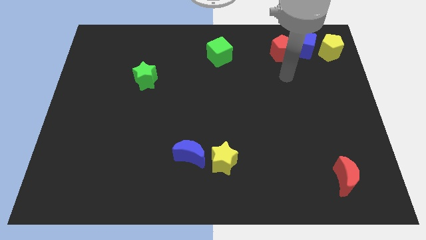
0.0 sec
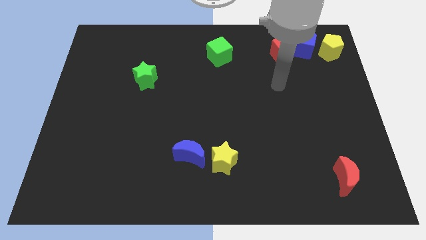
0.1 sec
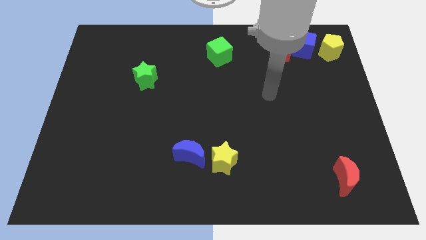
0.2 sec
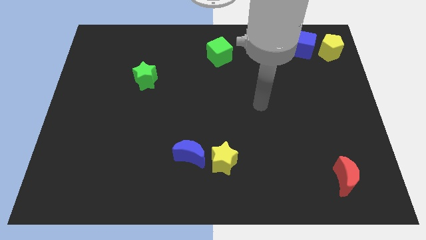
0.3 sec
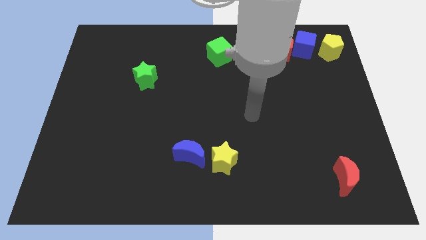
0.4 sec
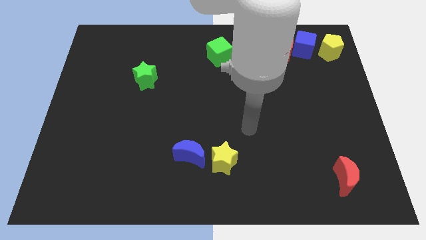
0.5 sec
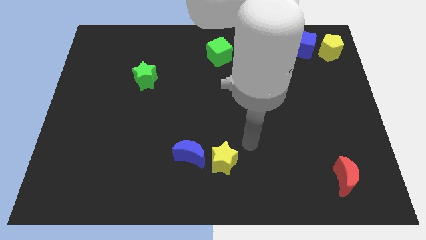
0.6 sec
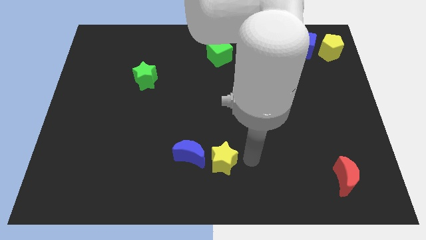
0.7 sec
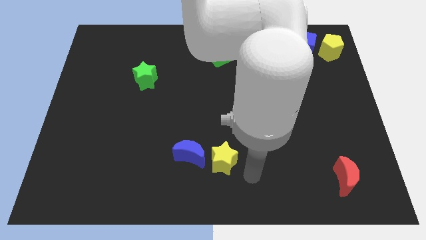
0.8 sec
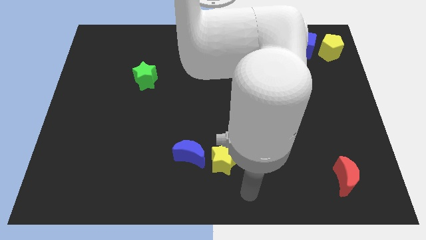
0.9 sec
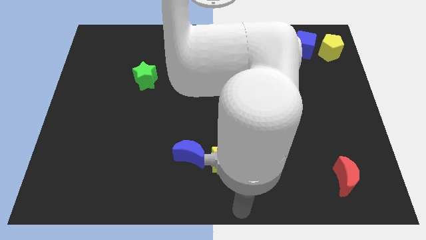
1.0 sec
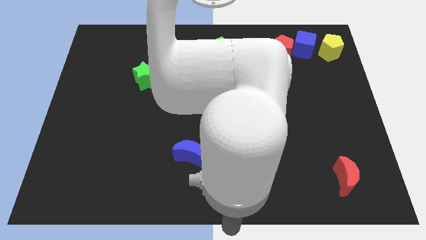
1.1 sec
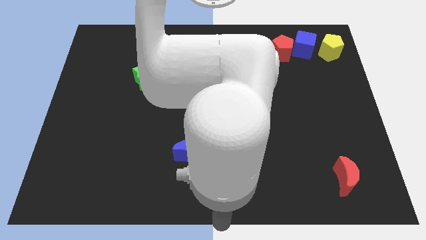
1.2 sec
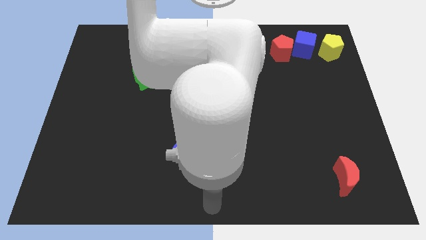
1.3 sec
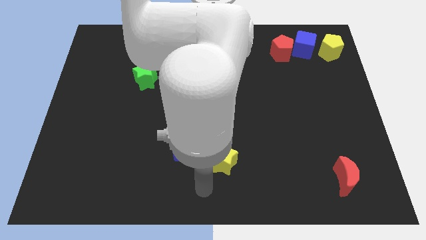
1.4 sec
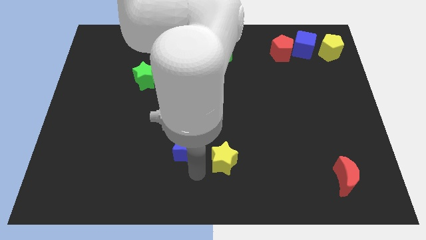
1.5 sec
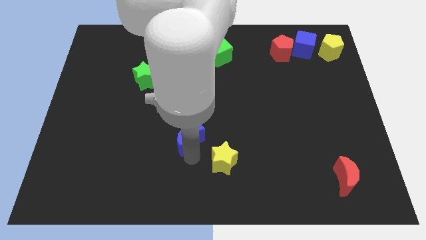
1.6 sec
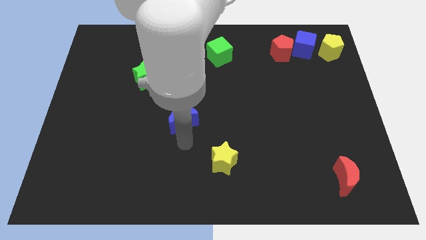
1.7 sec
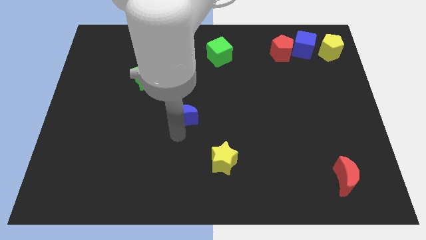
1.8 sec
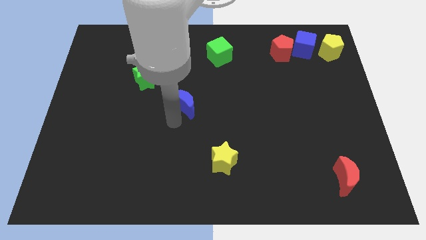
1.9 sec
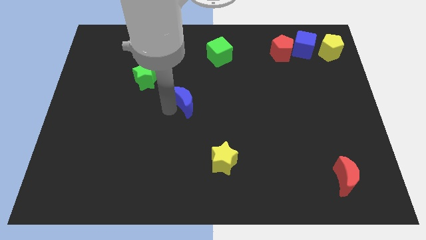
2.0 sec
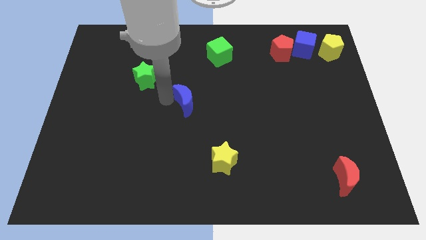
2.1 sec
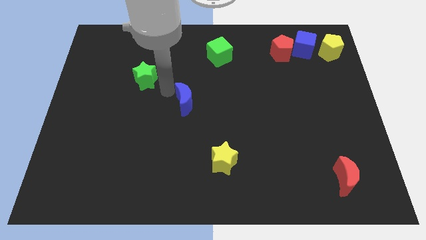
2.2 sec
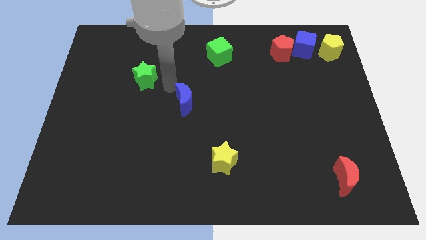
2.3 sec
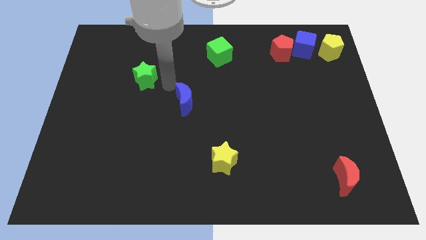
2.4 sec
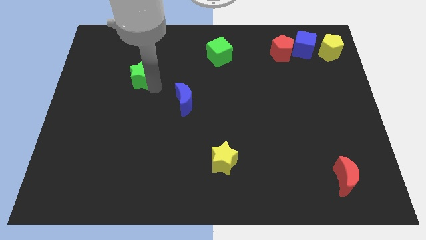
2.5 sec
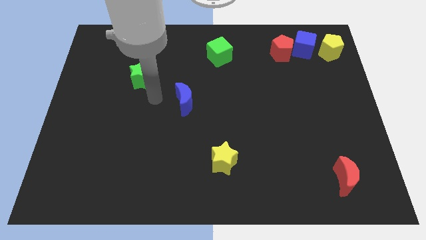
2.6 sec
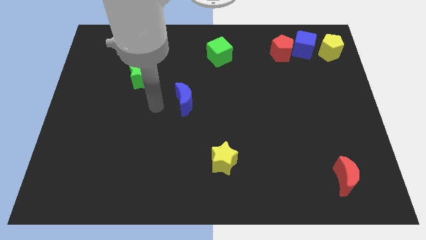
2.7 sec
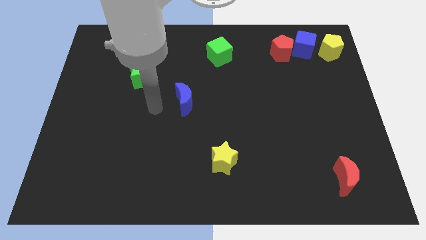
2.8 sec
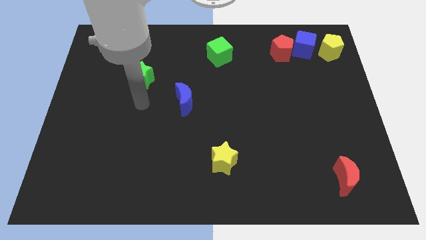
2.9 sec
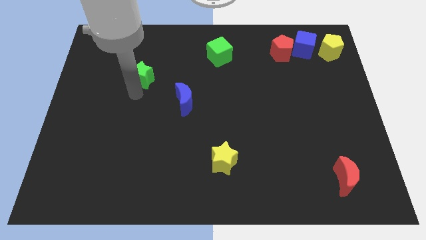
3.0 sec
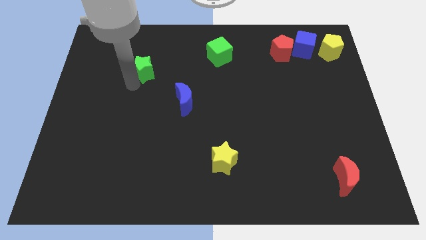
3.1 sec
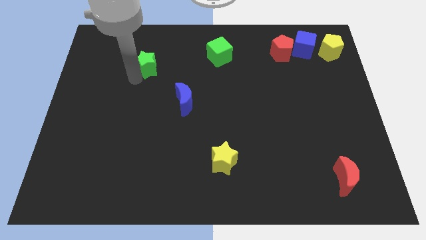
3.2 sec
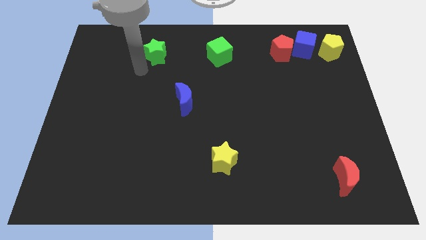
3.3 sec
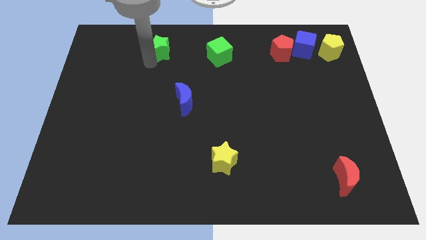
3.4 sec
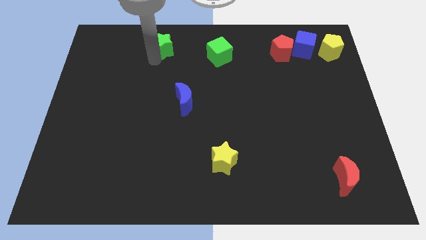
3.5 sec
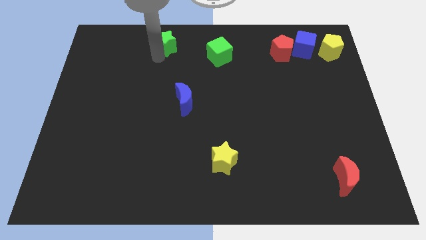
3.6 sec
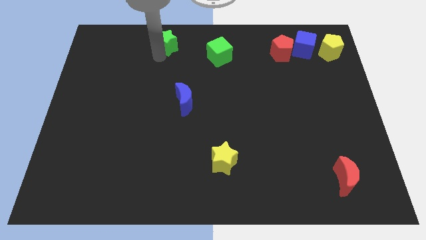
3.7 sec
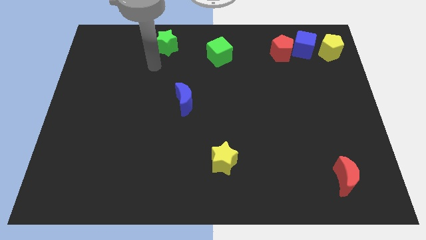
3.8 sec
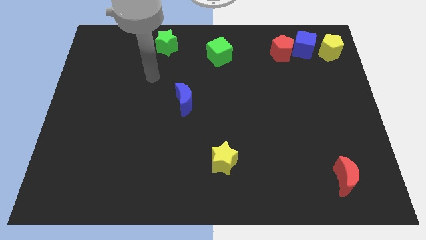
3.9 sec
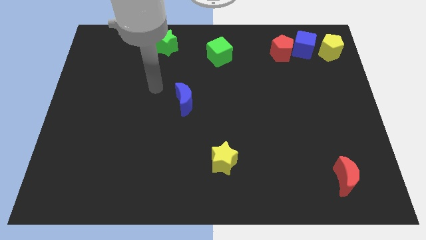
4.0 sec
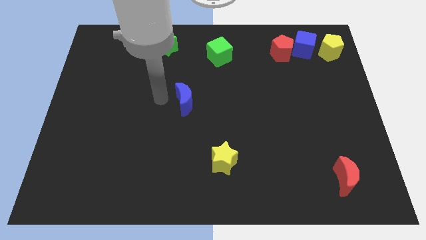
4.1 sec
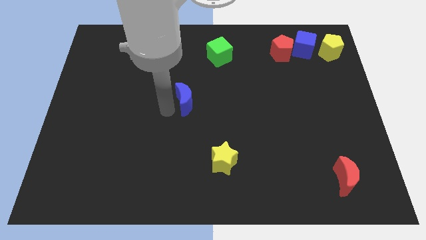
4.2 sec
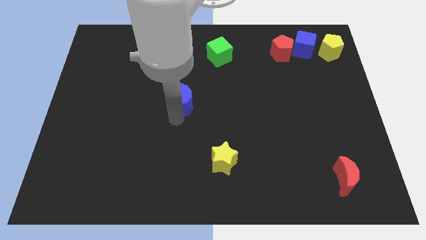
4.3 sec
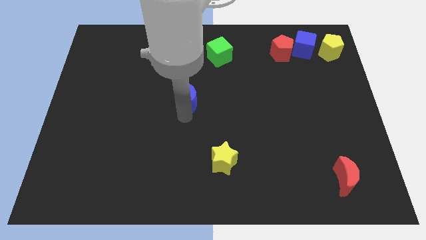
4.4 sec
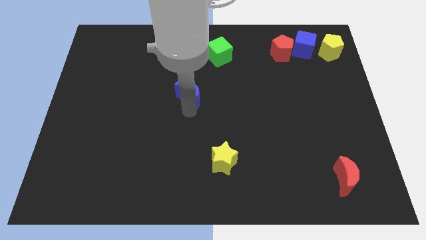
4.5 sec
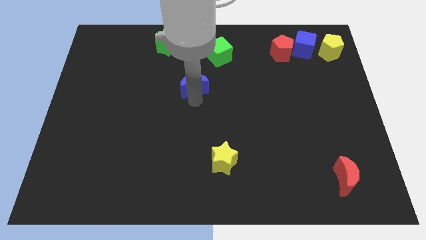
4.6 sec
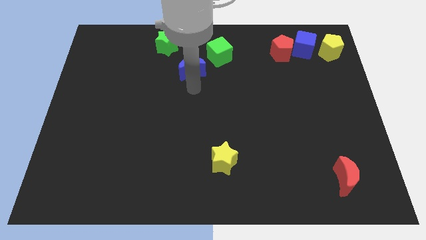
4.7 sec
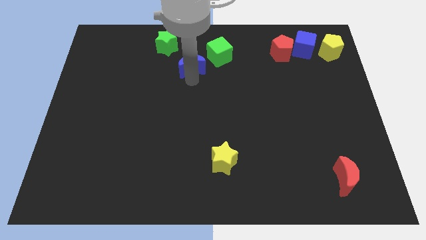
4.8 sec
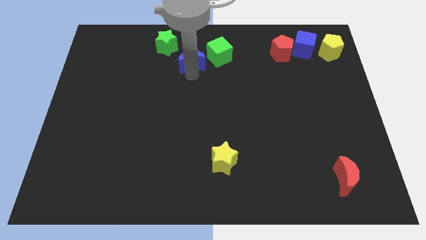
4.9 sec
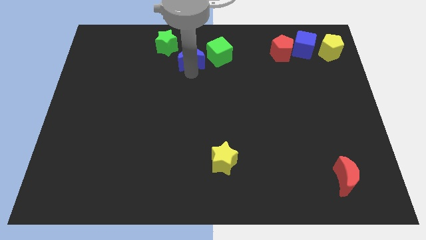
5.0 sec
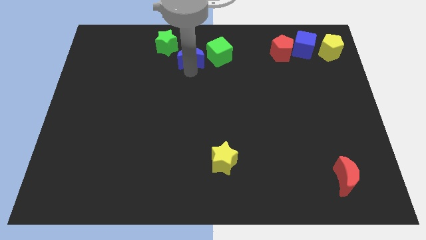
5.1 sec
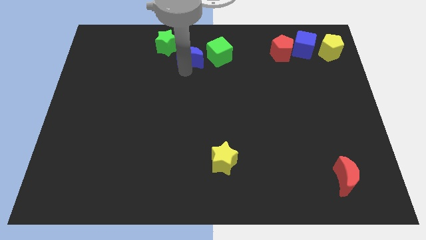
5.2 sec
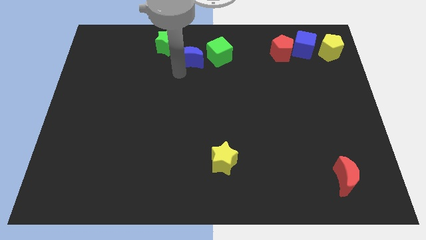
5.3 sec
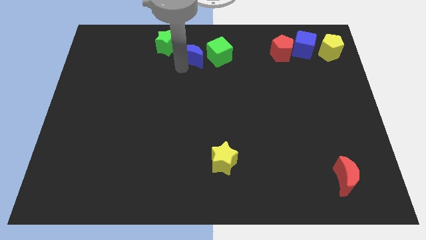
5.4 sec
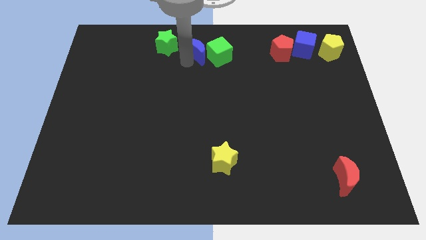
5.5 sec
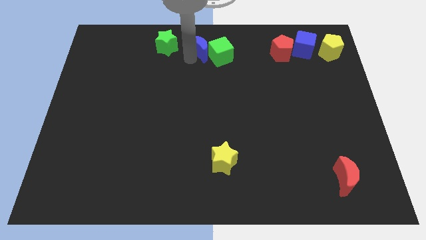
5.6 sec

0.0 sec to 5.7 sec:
place the blue crescent in between the green blocks

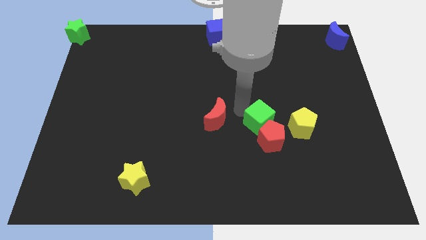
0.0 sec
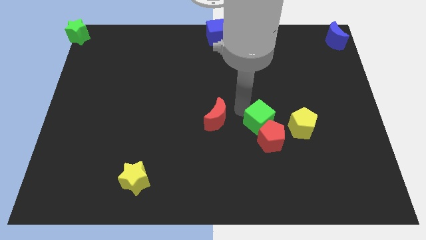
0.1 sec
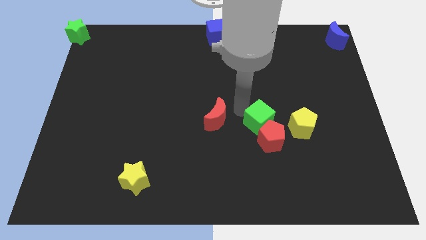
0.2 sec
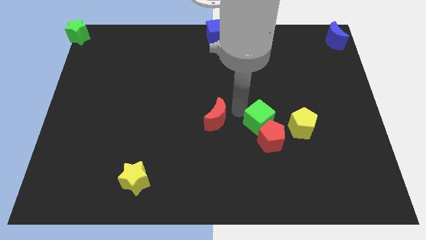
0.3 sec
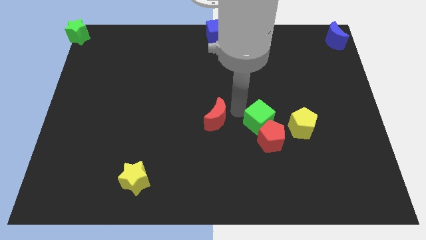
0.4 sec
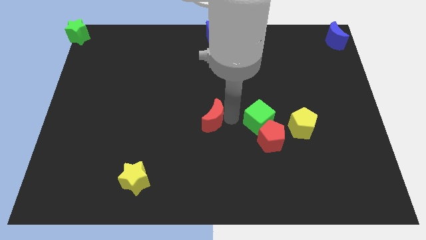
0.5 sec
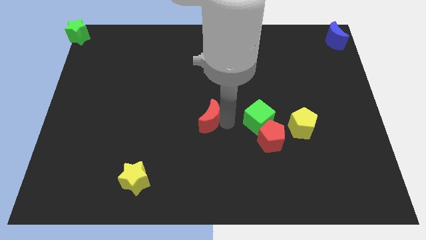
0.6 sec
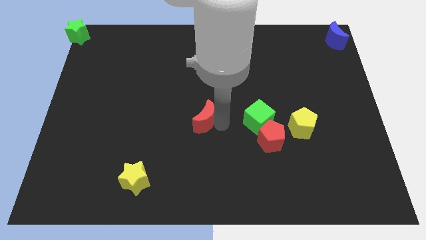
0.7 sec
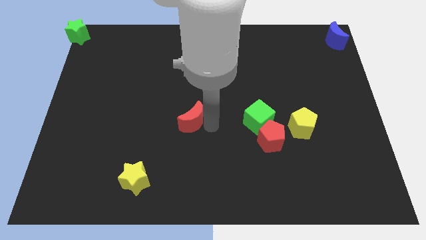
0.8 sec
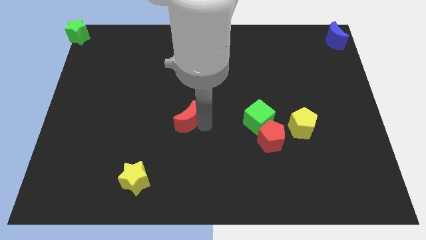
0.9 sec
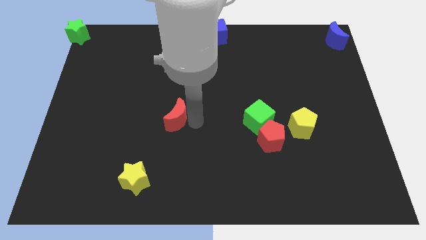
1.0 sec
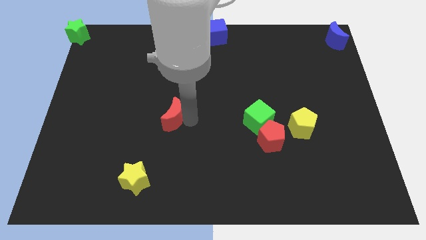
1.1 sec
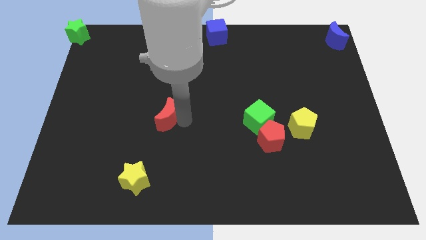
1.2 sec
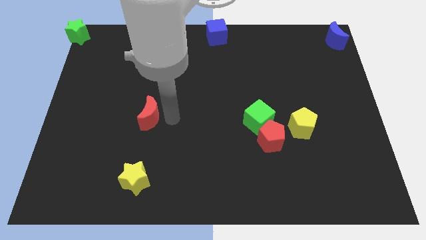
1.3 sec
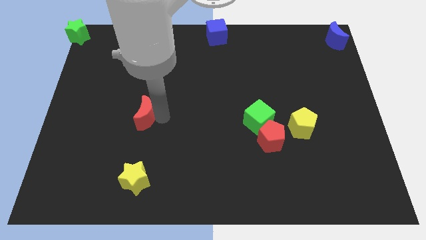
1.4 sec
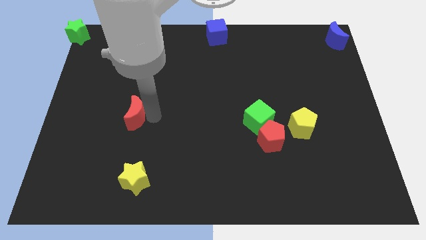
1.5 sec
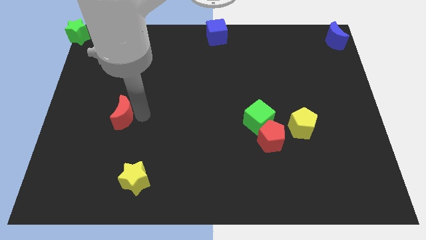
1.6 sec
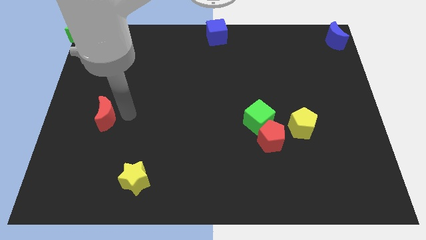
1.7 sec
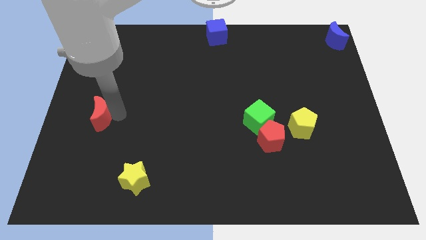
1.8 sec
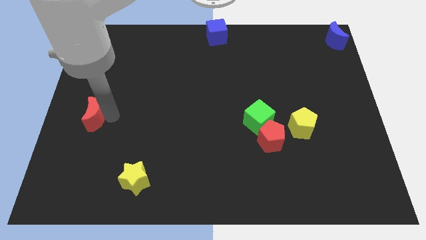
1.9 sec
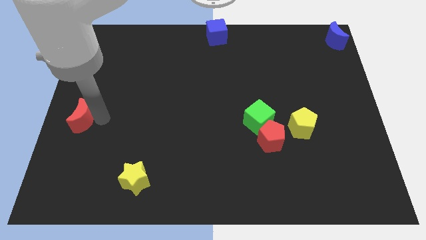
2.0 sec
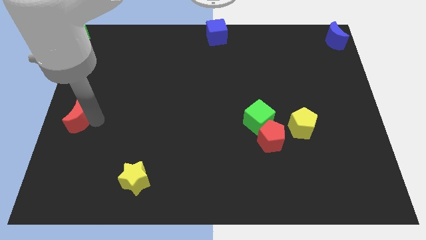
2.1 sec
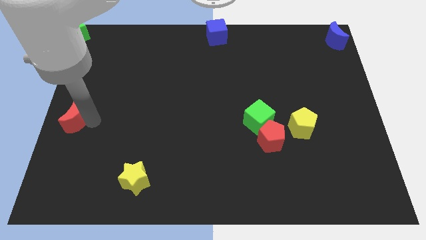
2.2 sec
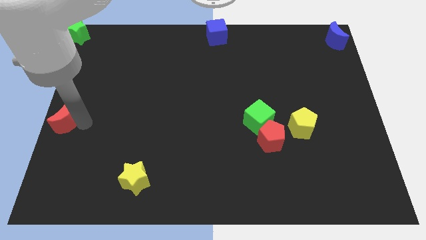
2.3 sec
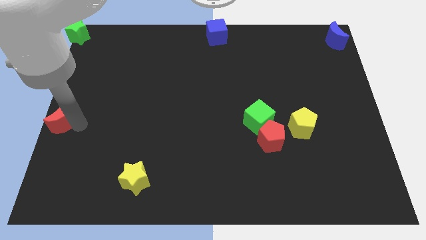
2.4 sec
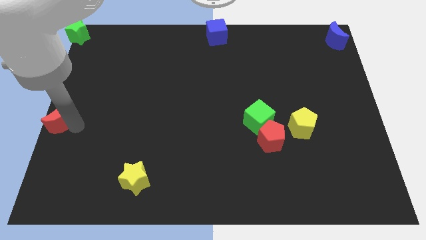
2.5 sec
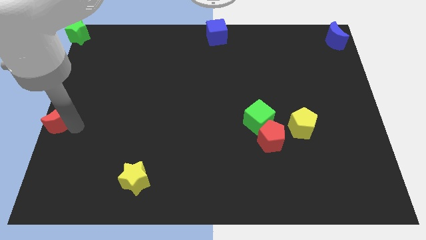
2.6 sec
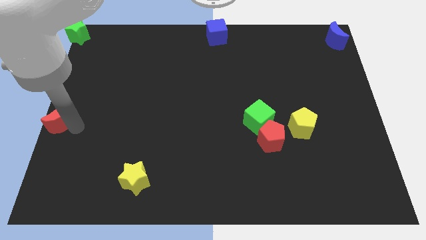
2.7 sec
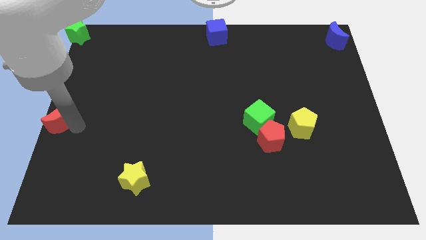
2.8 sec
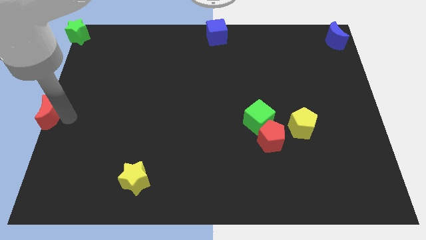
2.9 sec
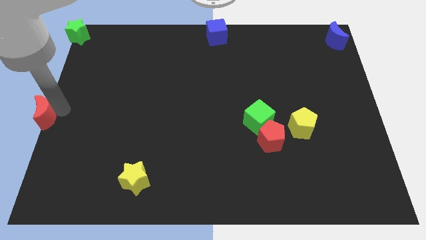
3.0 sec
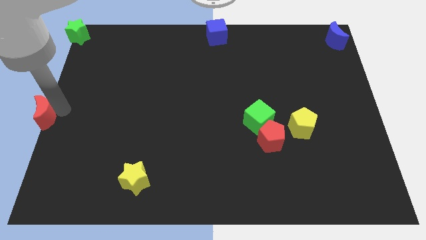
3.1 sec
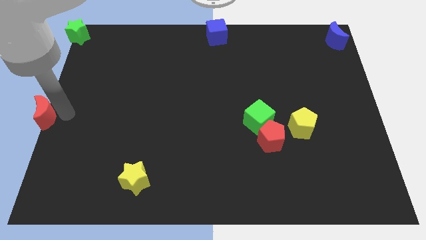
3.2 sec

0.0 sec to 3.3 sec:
push the red moon to the center left of the board
